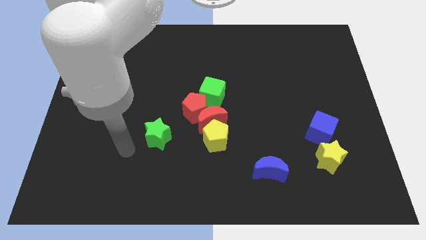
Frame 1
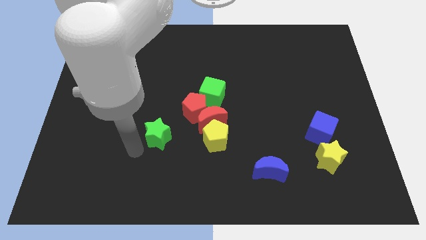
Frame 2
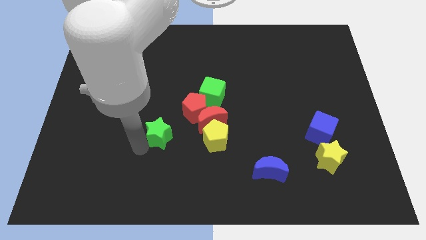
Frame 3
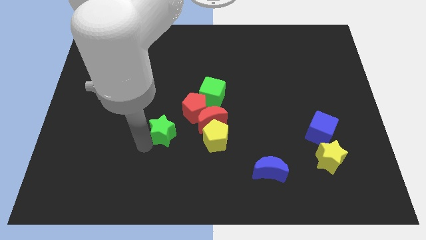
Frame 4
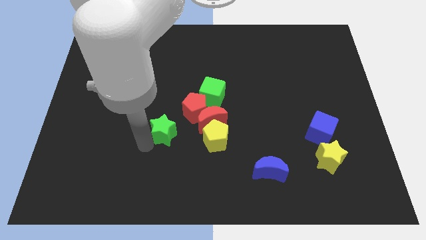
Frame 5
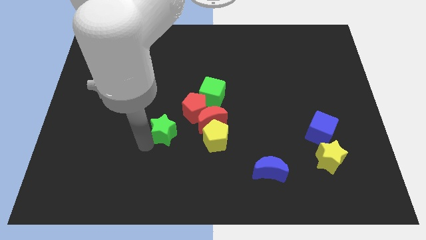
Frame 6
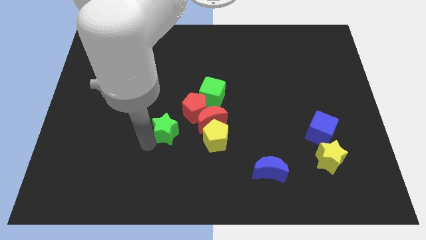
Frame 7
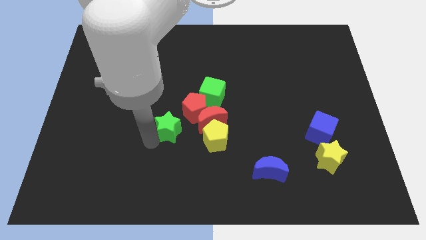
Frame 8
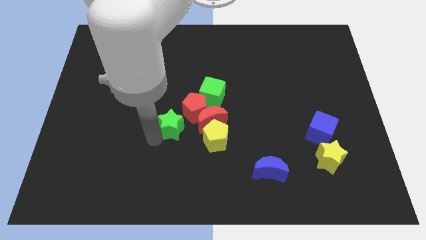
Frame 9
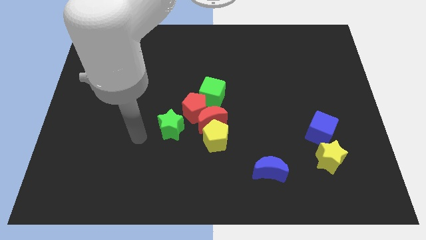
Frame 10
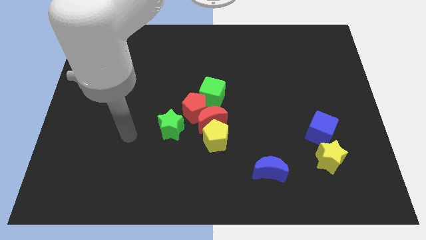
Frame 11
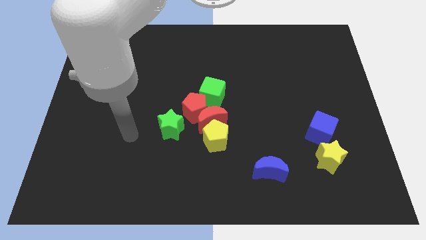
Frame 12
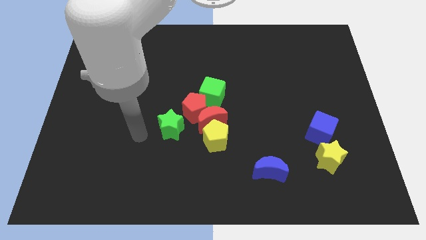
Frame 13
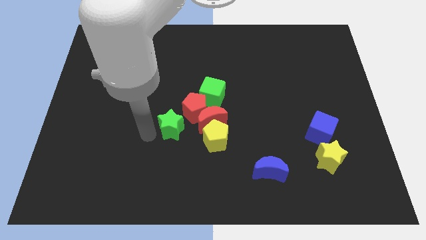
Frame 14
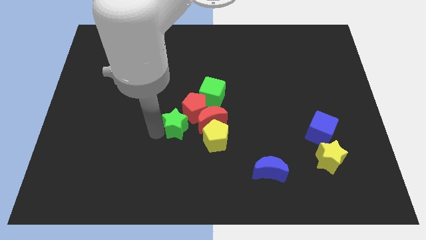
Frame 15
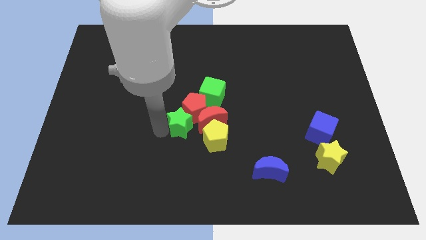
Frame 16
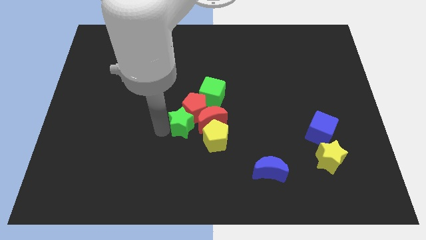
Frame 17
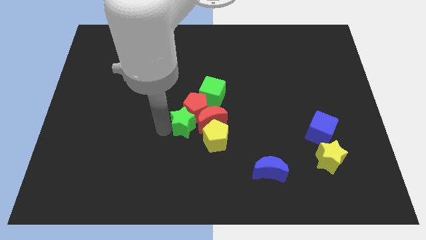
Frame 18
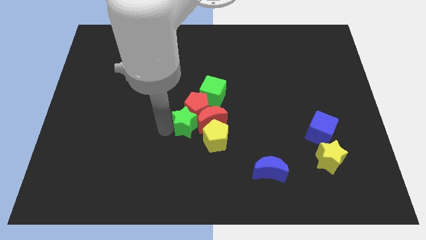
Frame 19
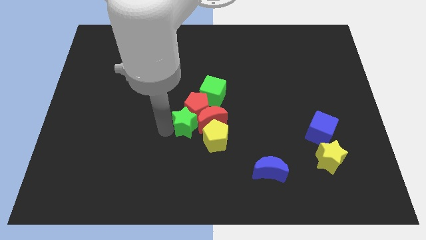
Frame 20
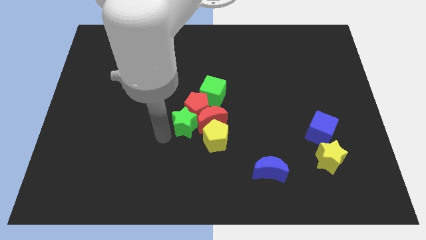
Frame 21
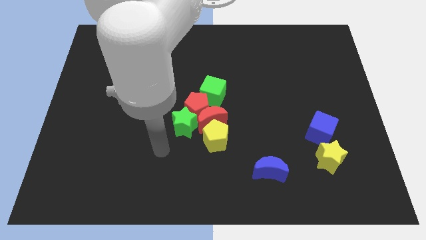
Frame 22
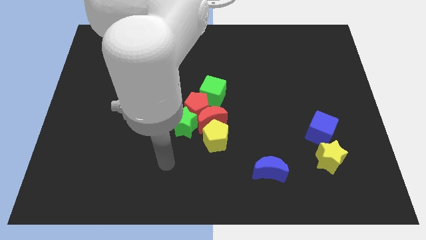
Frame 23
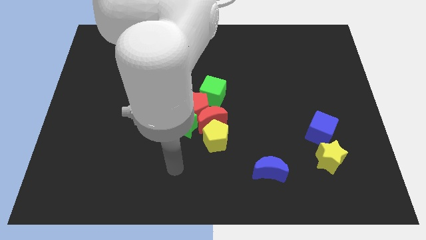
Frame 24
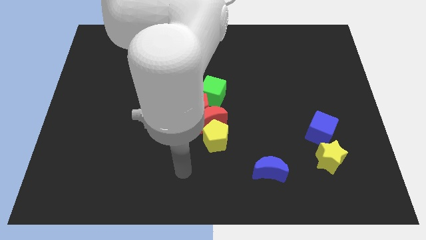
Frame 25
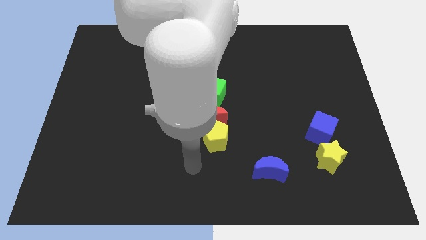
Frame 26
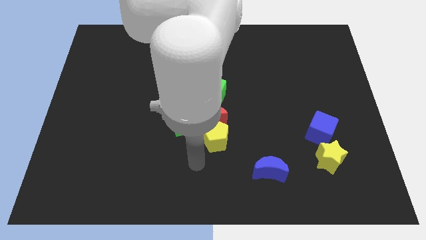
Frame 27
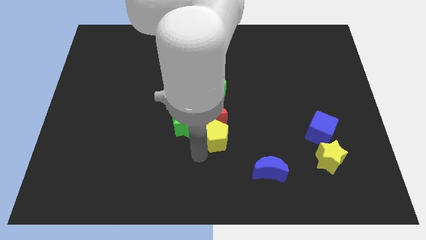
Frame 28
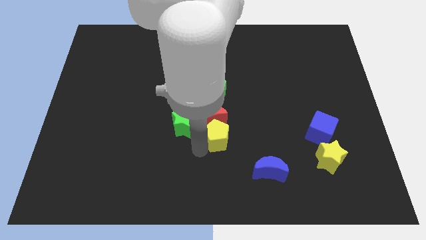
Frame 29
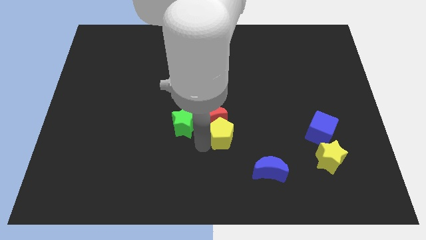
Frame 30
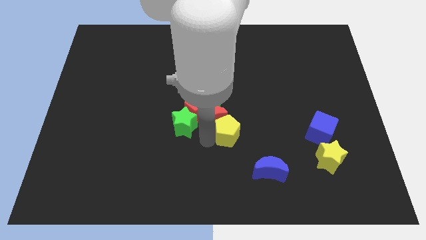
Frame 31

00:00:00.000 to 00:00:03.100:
move the green star close to the red crescent

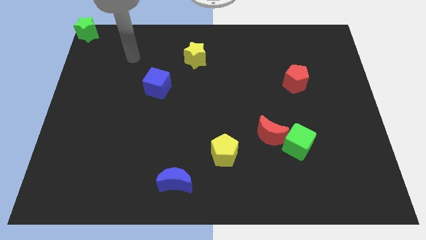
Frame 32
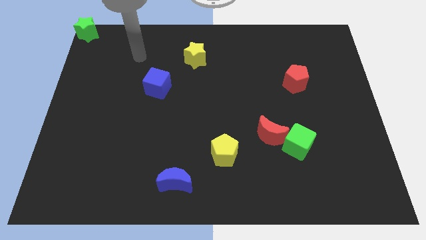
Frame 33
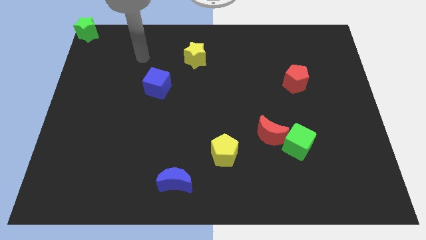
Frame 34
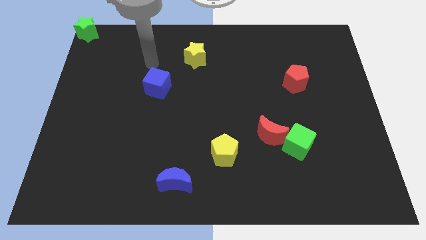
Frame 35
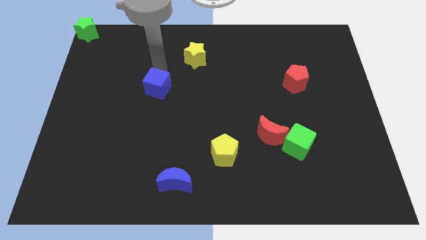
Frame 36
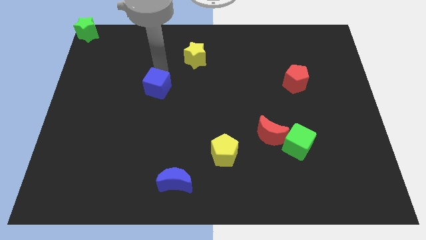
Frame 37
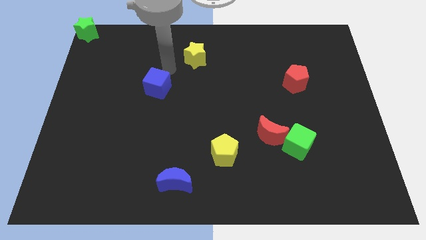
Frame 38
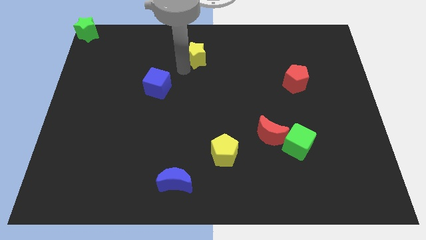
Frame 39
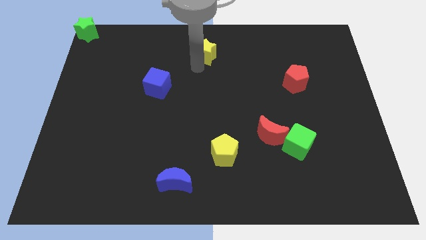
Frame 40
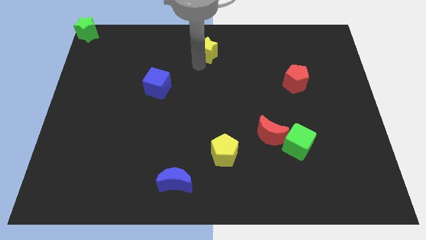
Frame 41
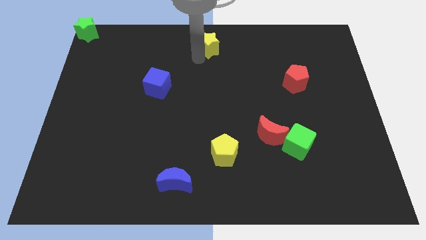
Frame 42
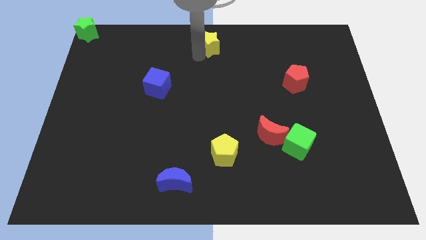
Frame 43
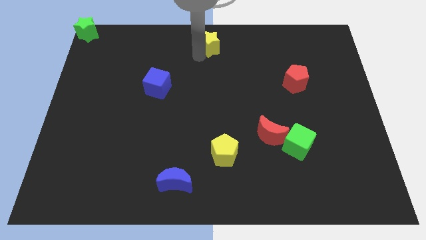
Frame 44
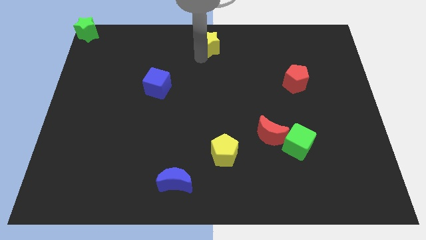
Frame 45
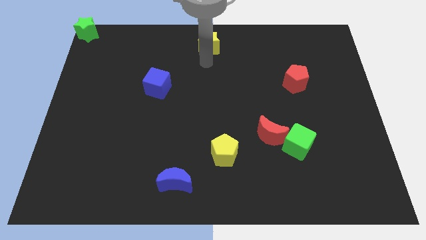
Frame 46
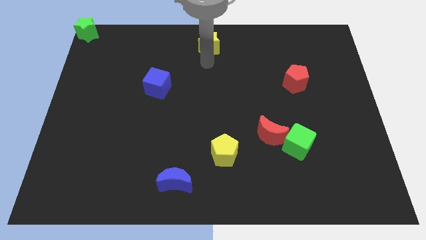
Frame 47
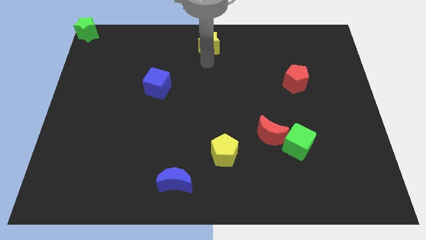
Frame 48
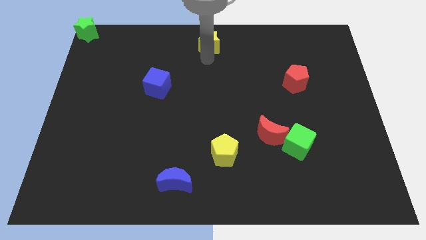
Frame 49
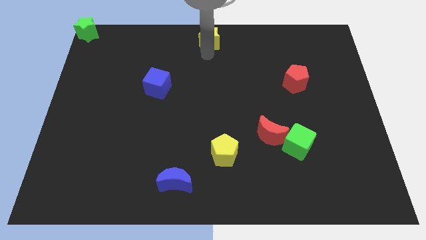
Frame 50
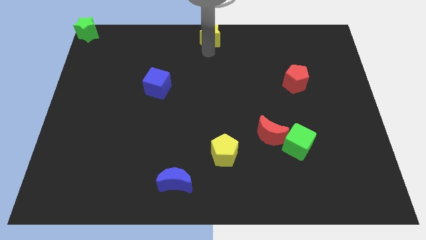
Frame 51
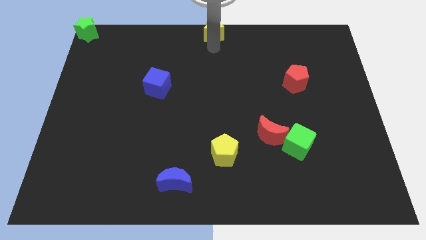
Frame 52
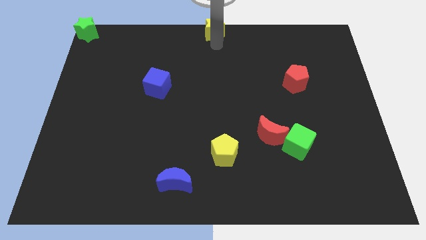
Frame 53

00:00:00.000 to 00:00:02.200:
move the yellow star to the top center

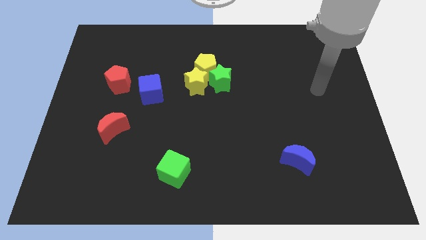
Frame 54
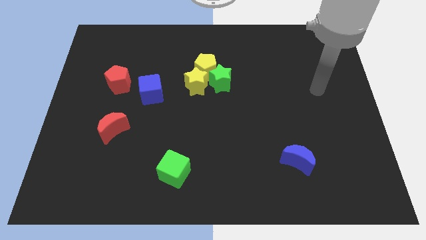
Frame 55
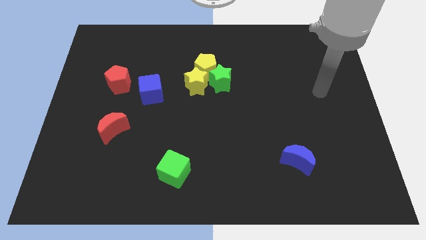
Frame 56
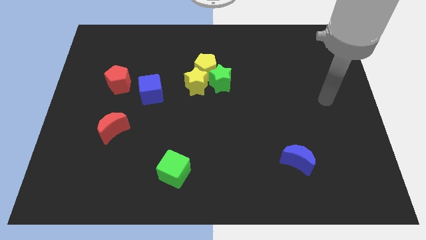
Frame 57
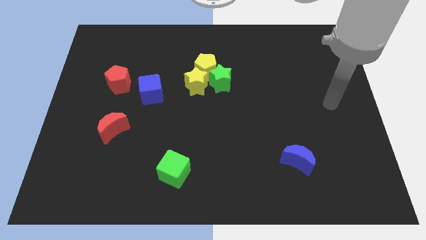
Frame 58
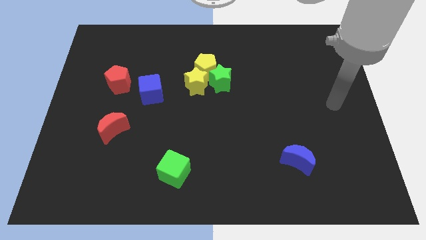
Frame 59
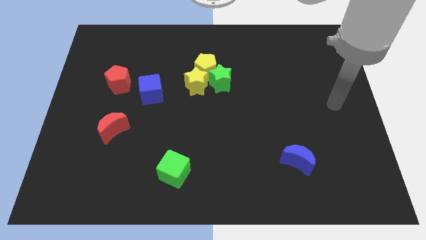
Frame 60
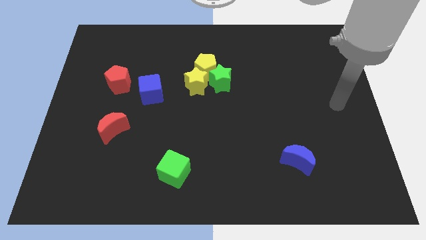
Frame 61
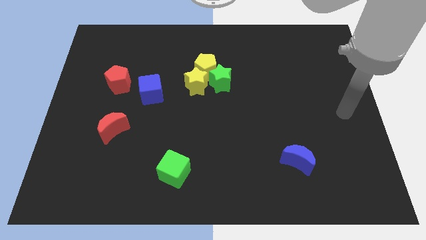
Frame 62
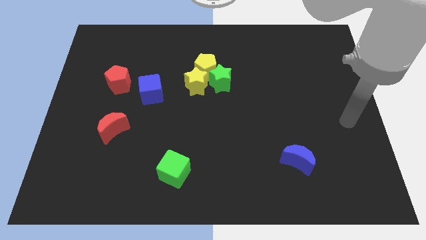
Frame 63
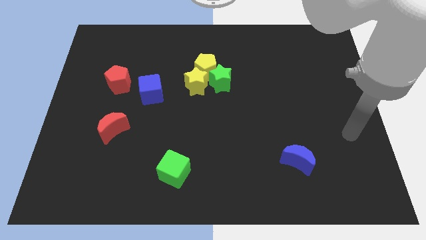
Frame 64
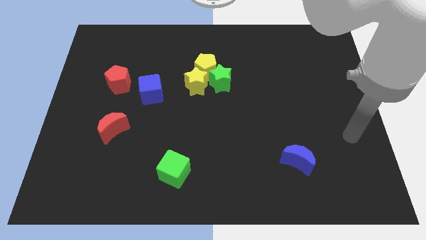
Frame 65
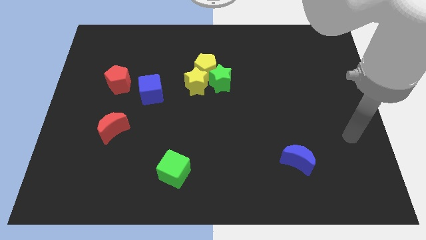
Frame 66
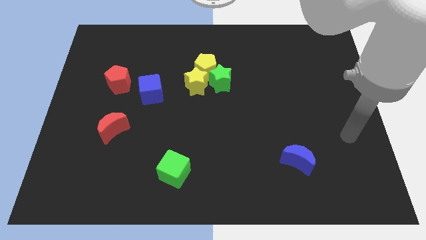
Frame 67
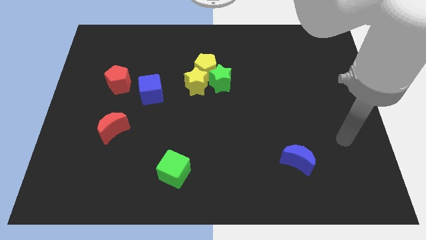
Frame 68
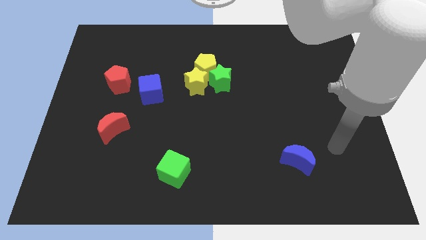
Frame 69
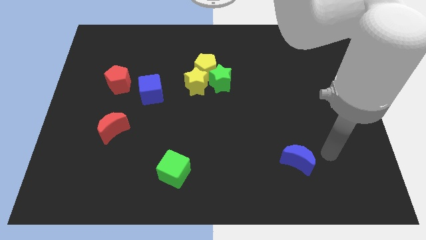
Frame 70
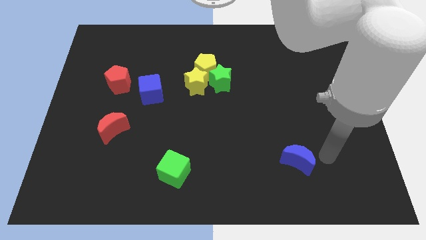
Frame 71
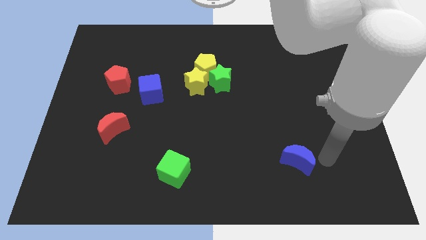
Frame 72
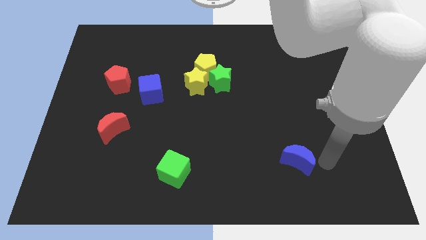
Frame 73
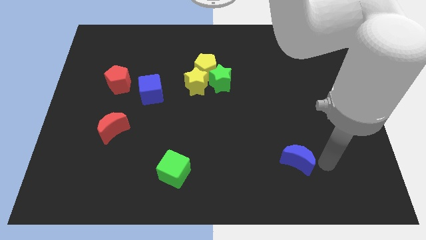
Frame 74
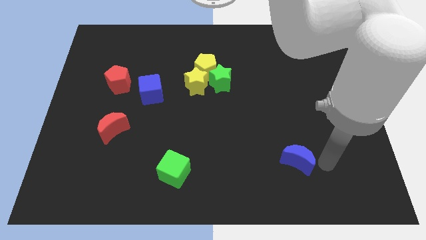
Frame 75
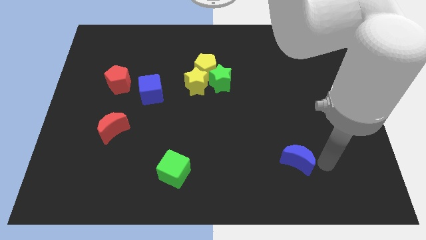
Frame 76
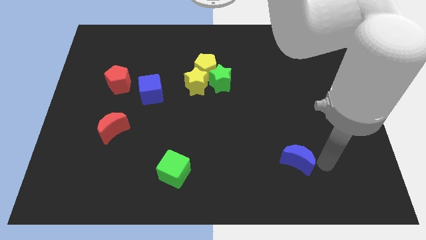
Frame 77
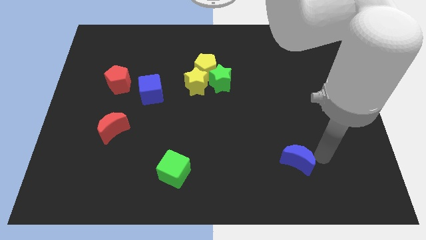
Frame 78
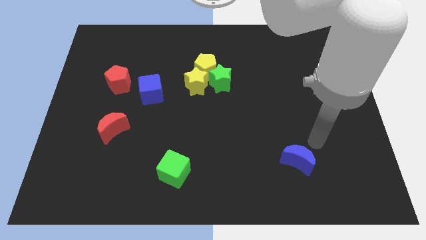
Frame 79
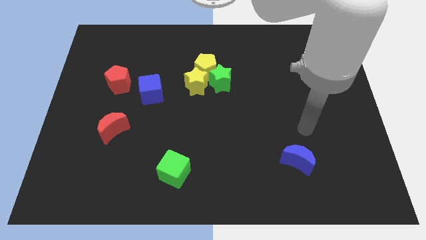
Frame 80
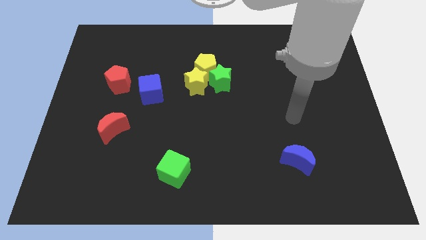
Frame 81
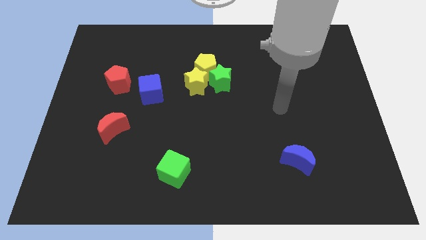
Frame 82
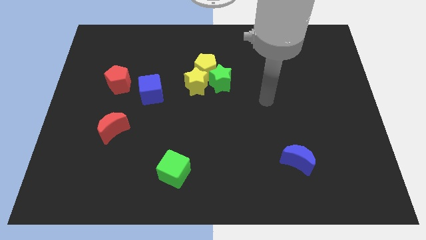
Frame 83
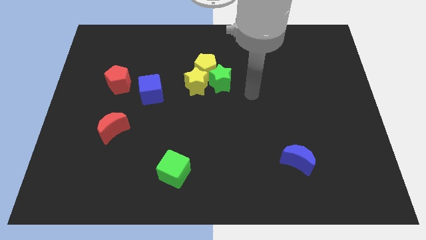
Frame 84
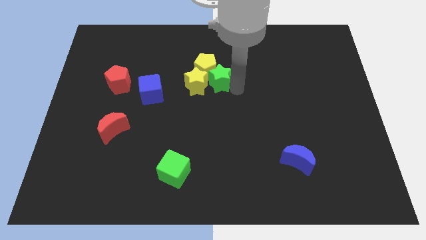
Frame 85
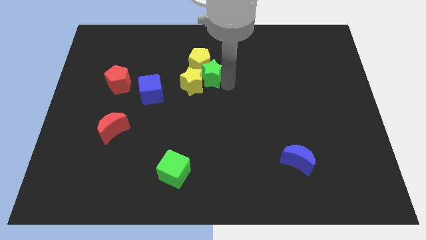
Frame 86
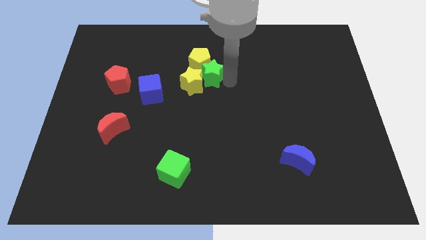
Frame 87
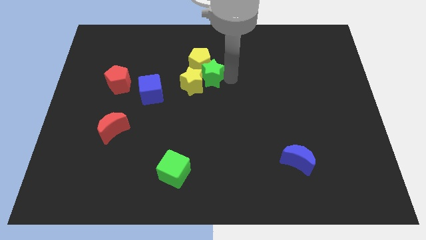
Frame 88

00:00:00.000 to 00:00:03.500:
move arm to the green star and push

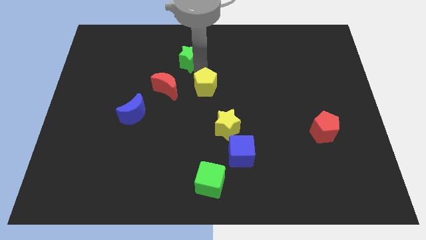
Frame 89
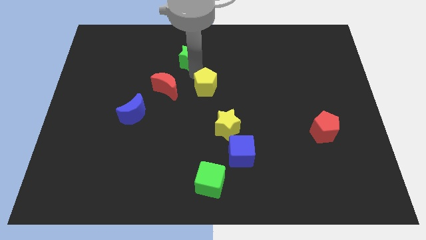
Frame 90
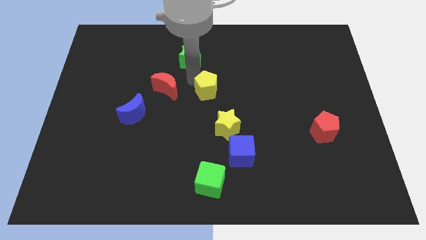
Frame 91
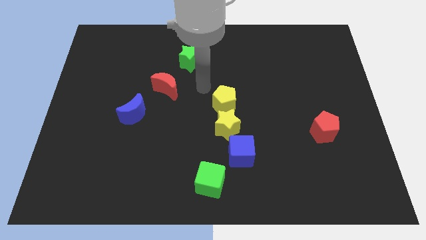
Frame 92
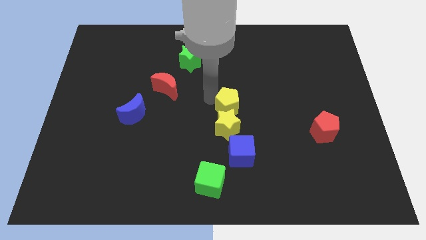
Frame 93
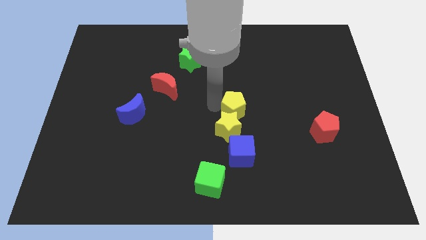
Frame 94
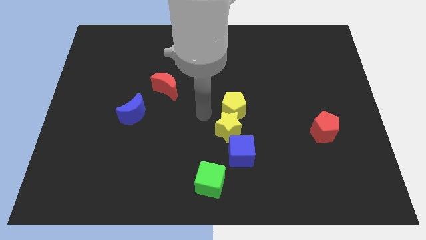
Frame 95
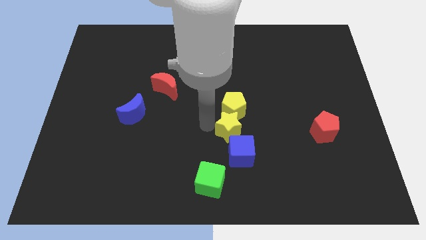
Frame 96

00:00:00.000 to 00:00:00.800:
move yellow pentagon into yellow star
